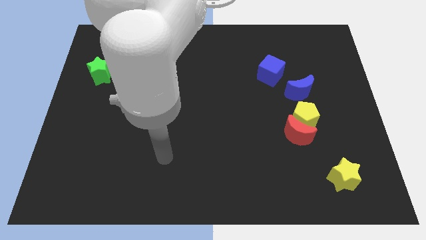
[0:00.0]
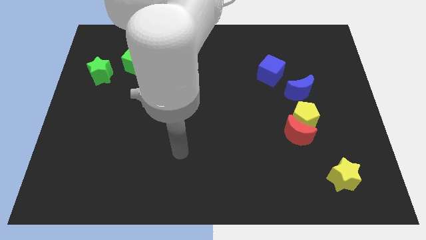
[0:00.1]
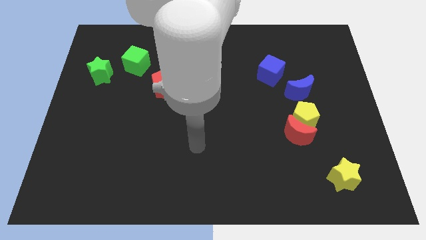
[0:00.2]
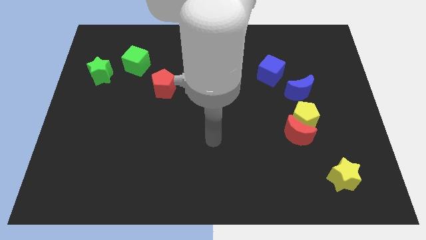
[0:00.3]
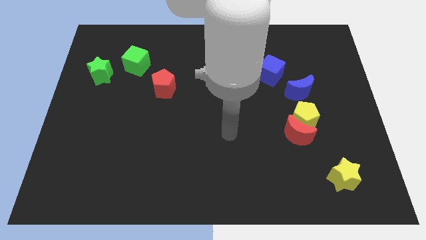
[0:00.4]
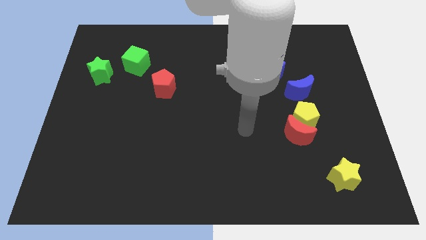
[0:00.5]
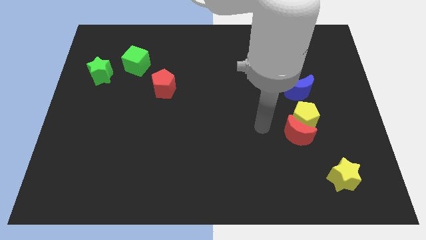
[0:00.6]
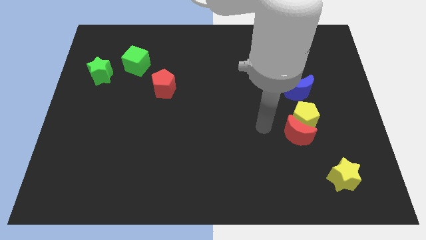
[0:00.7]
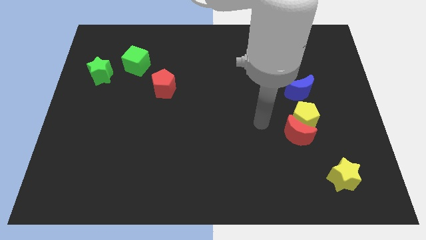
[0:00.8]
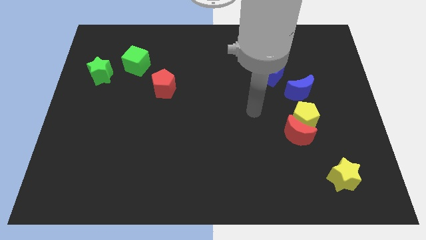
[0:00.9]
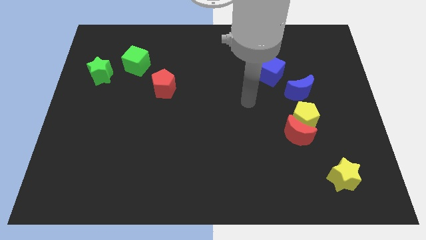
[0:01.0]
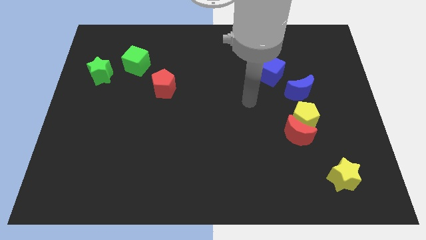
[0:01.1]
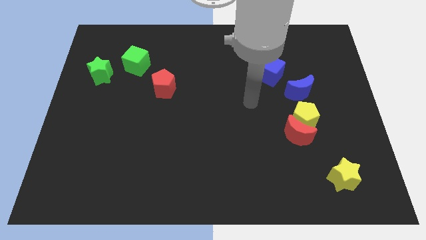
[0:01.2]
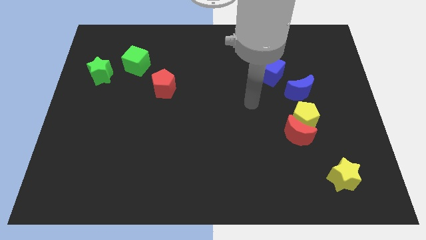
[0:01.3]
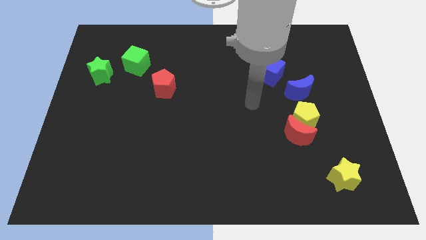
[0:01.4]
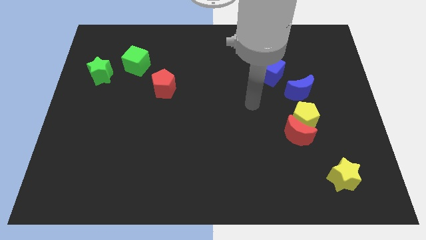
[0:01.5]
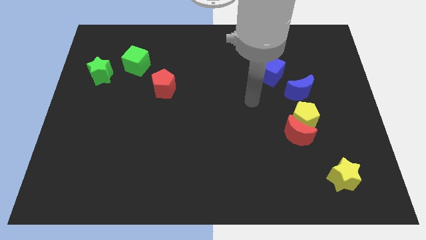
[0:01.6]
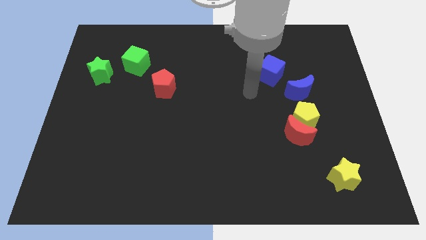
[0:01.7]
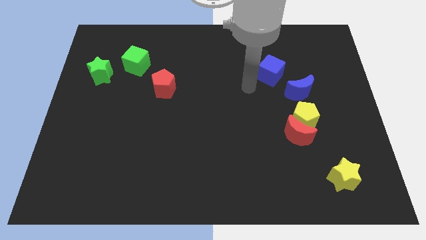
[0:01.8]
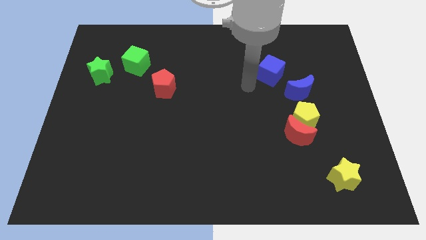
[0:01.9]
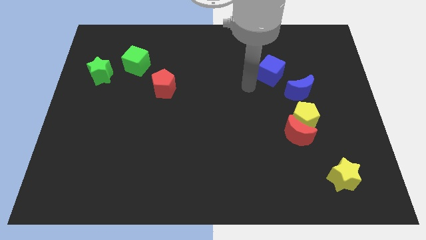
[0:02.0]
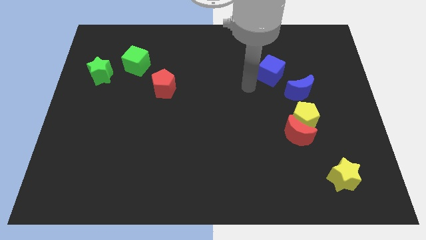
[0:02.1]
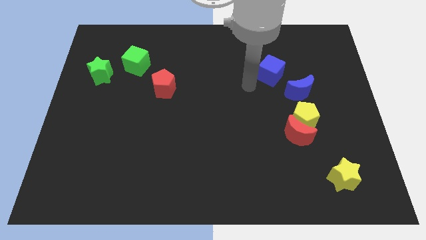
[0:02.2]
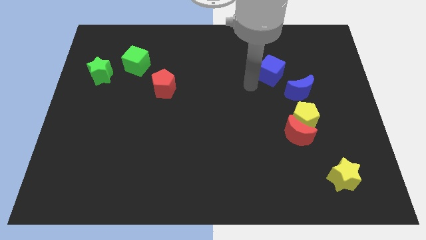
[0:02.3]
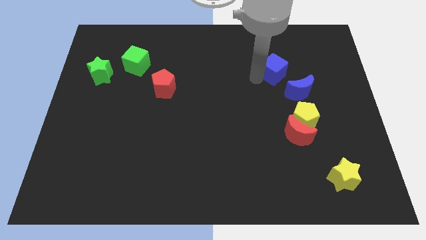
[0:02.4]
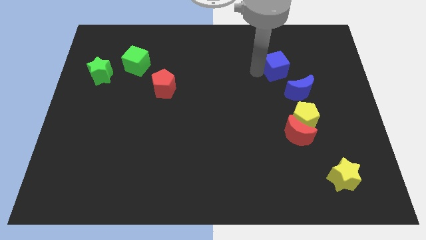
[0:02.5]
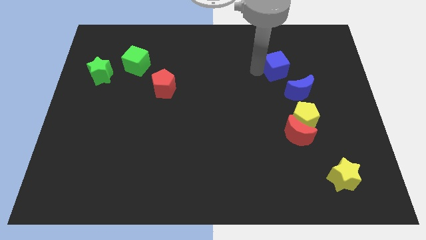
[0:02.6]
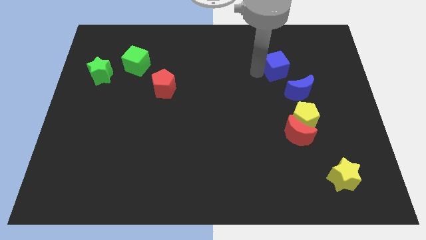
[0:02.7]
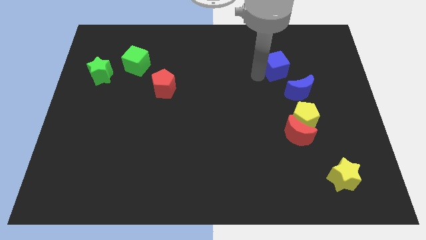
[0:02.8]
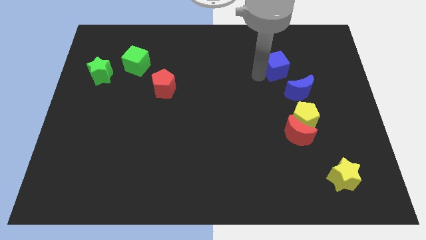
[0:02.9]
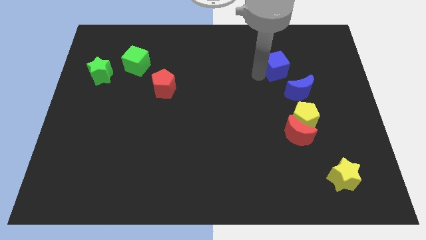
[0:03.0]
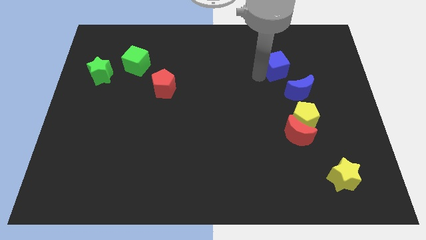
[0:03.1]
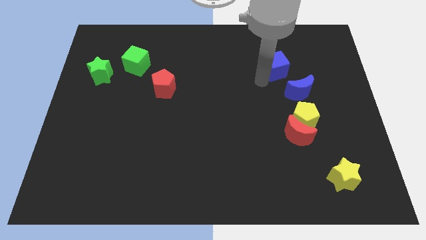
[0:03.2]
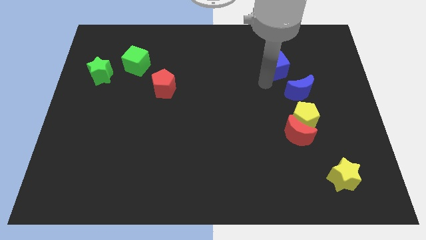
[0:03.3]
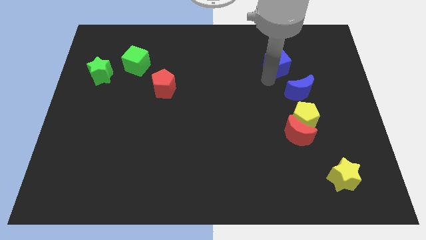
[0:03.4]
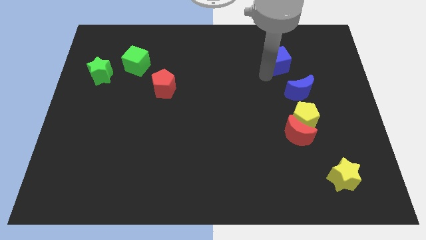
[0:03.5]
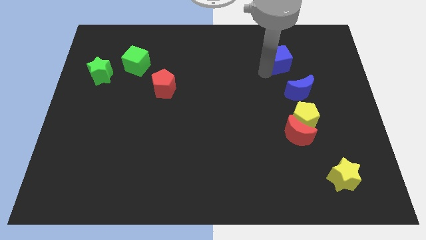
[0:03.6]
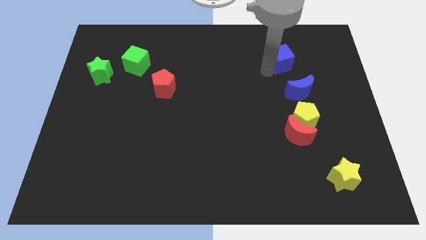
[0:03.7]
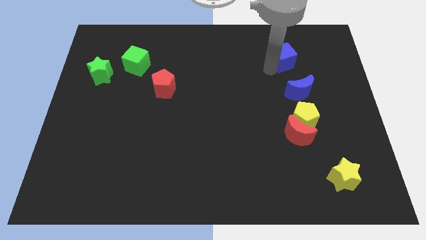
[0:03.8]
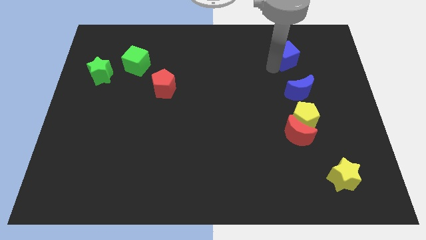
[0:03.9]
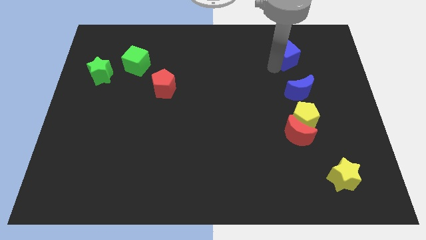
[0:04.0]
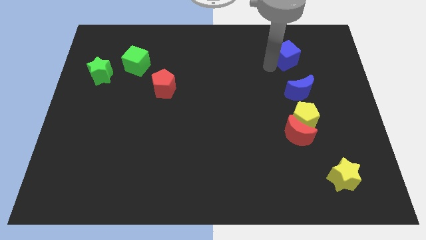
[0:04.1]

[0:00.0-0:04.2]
push blue cube slightly up

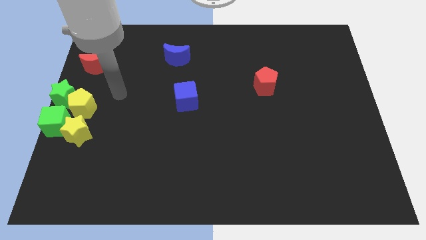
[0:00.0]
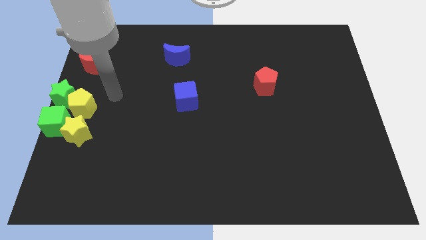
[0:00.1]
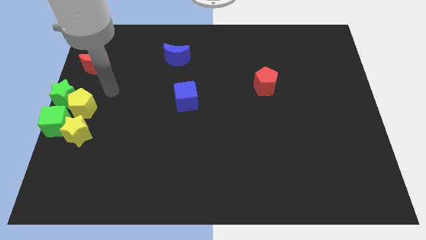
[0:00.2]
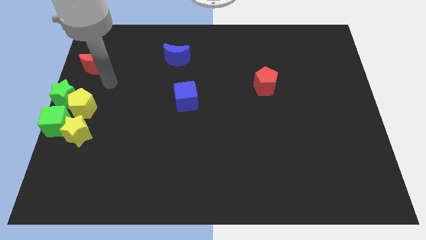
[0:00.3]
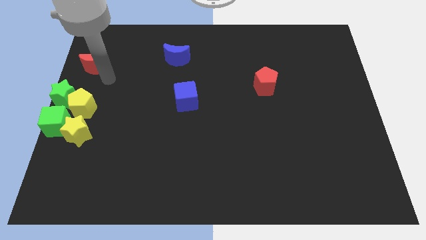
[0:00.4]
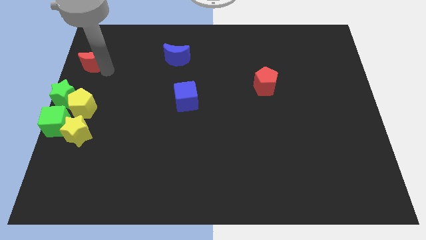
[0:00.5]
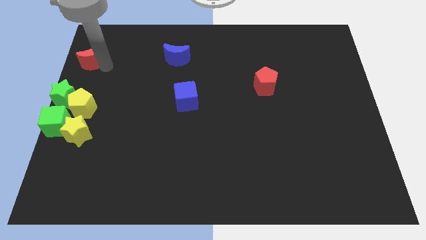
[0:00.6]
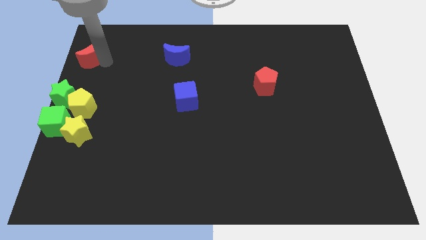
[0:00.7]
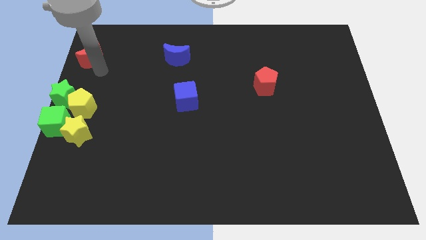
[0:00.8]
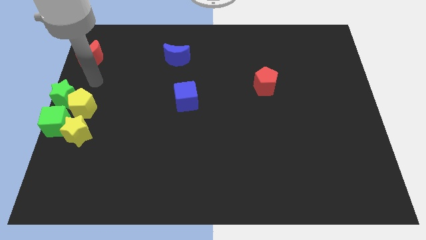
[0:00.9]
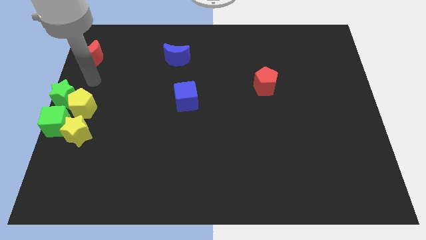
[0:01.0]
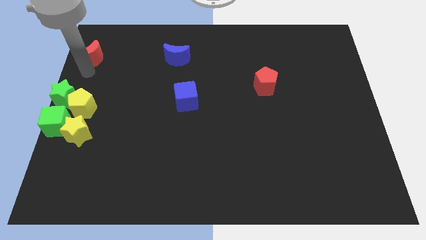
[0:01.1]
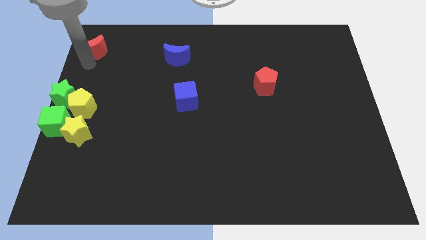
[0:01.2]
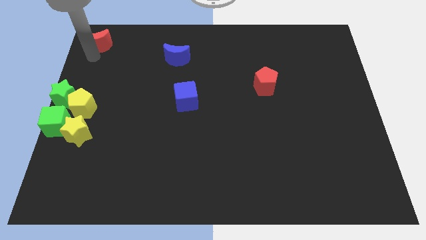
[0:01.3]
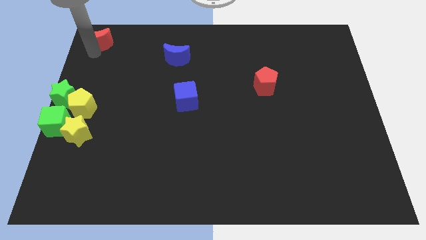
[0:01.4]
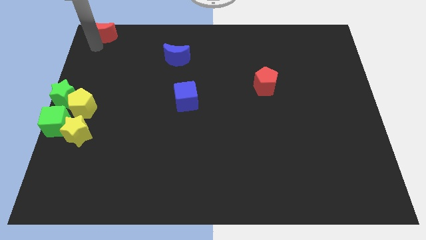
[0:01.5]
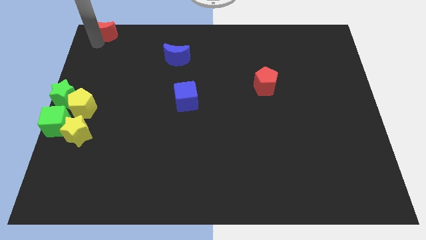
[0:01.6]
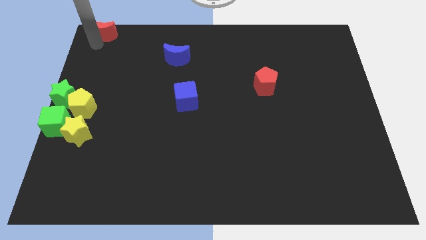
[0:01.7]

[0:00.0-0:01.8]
slide the red crescent to the top right side of the board

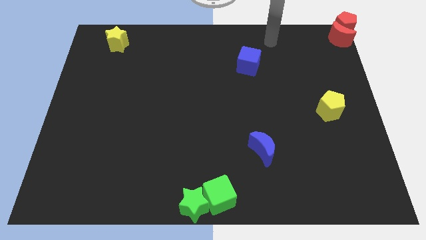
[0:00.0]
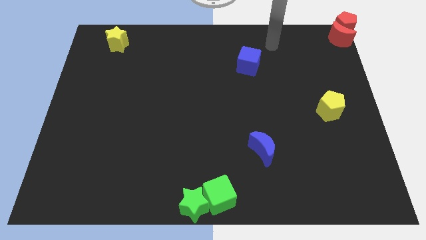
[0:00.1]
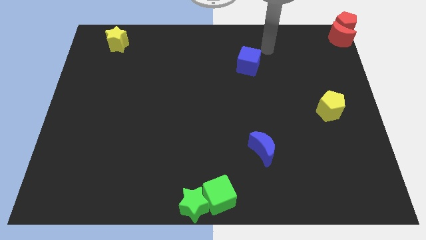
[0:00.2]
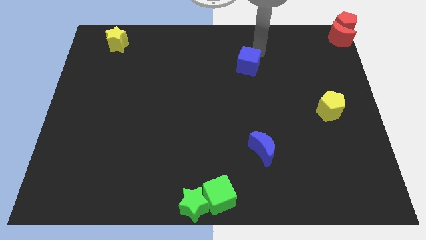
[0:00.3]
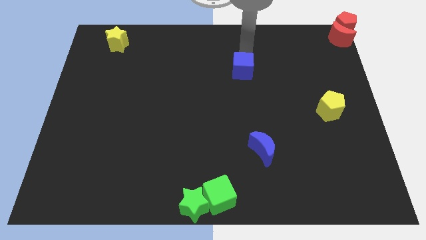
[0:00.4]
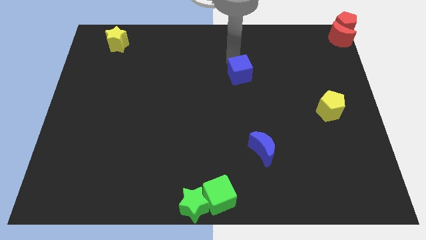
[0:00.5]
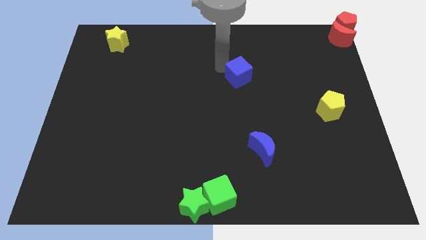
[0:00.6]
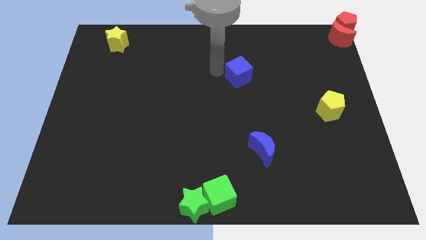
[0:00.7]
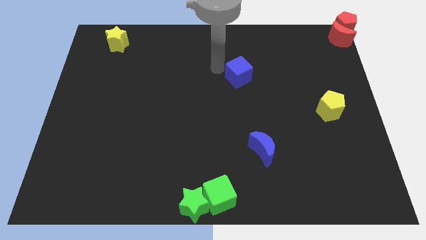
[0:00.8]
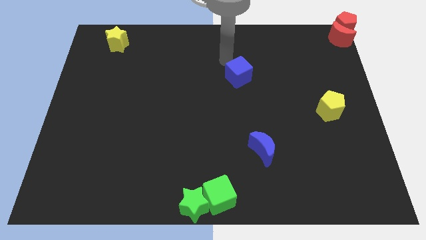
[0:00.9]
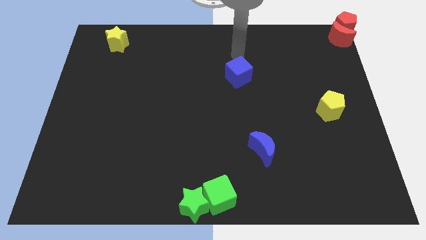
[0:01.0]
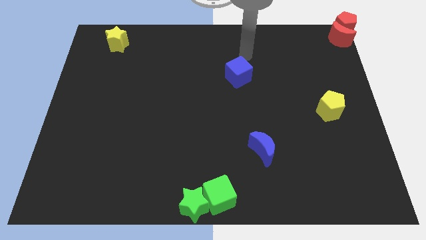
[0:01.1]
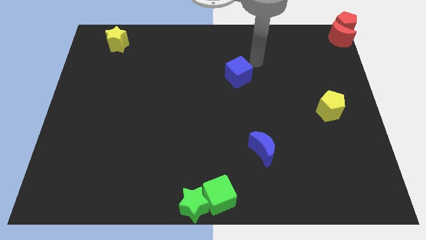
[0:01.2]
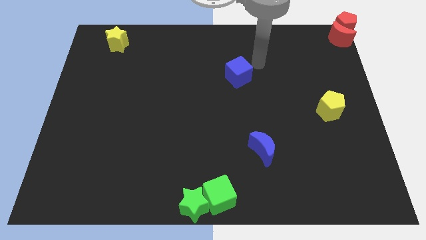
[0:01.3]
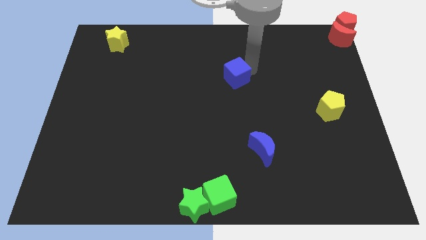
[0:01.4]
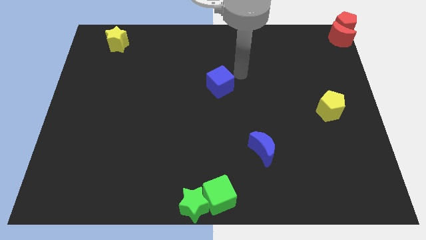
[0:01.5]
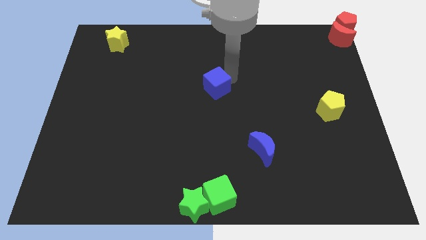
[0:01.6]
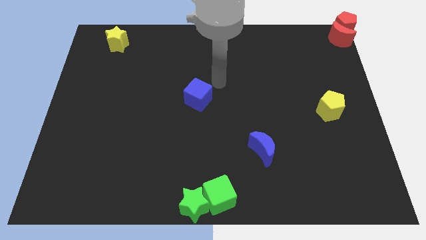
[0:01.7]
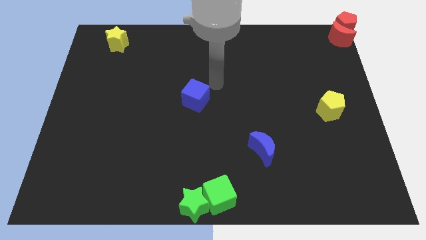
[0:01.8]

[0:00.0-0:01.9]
move the blue cube to the center of the board

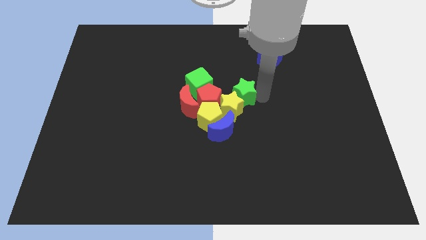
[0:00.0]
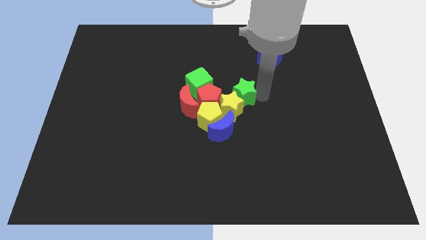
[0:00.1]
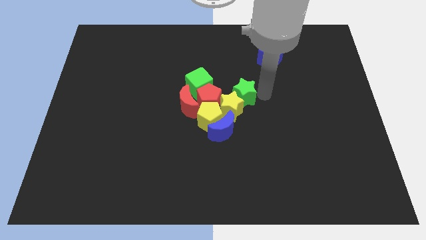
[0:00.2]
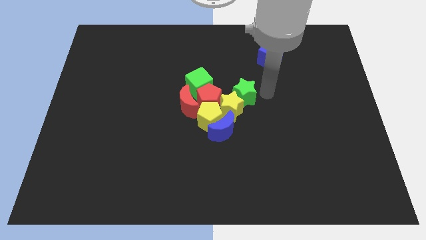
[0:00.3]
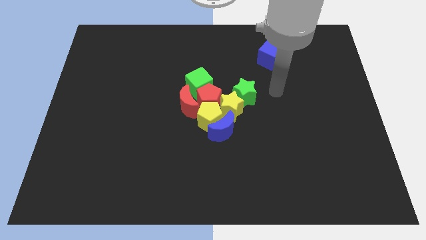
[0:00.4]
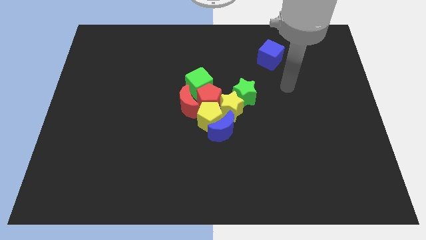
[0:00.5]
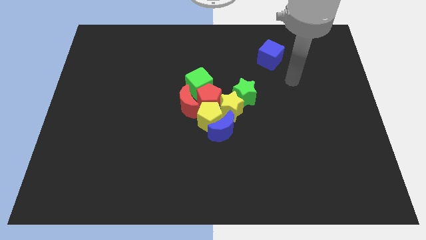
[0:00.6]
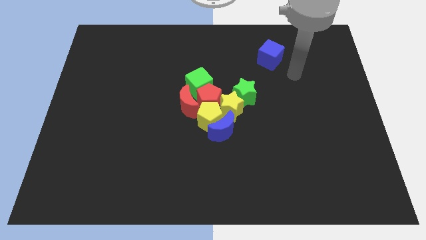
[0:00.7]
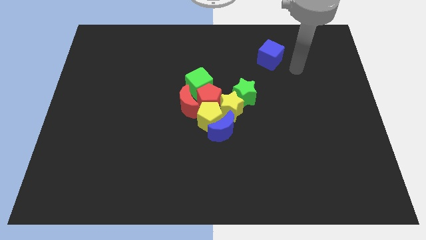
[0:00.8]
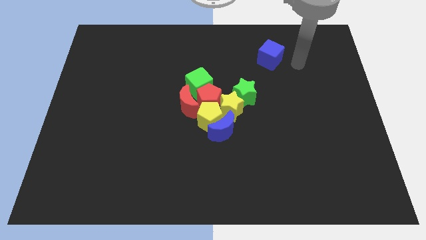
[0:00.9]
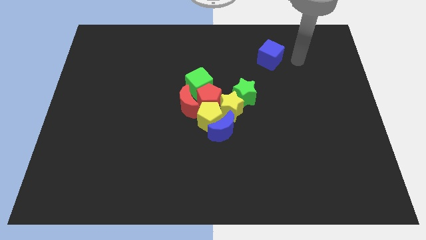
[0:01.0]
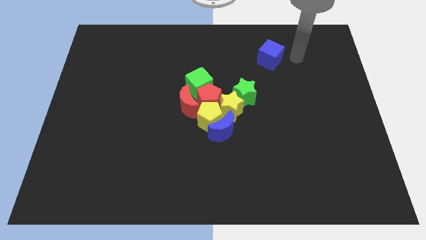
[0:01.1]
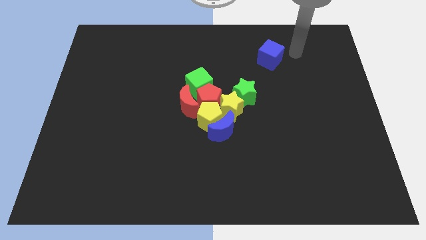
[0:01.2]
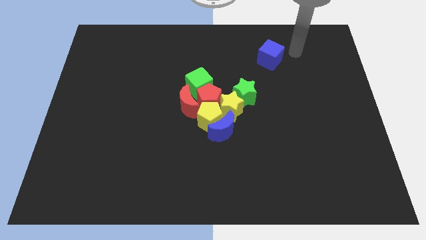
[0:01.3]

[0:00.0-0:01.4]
move your arm to the blue cube
